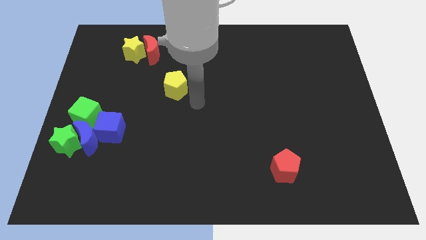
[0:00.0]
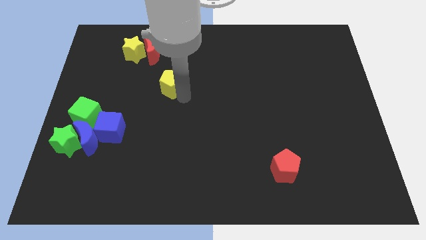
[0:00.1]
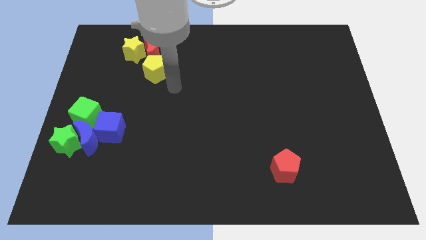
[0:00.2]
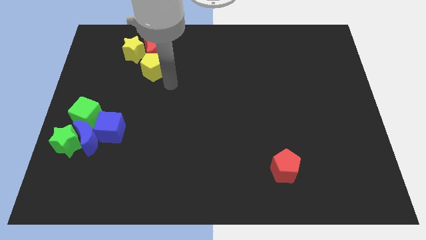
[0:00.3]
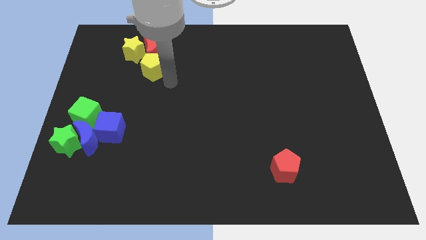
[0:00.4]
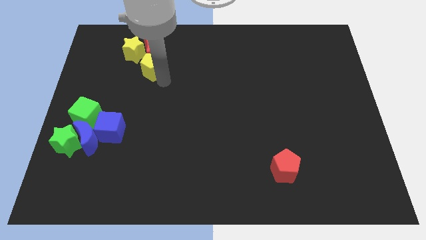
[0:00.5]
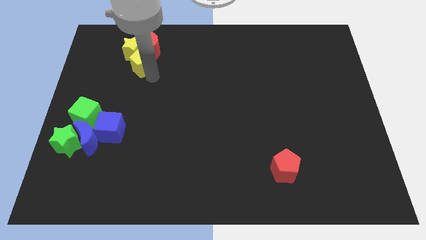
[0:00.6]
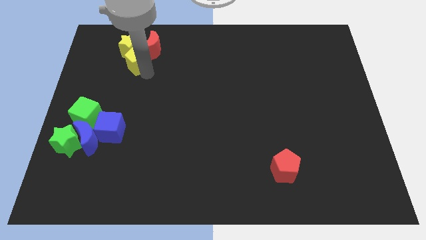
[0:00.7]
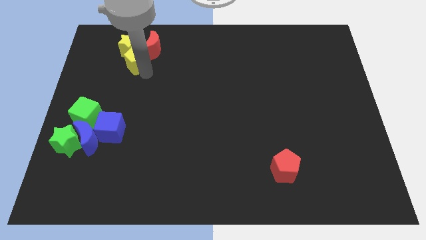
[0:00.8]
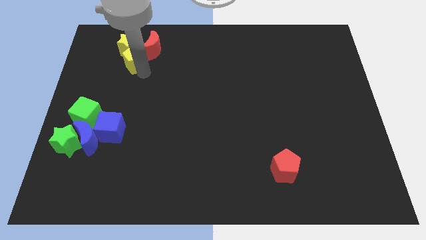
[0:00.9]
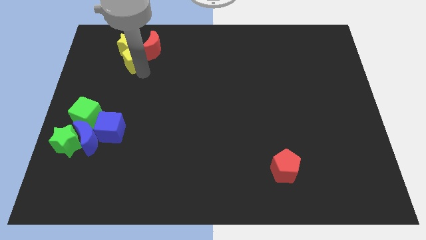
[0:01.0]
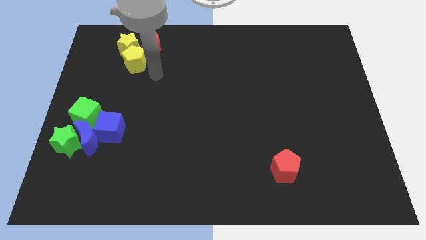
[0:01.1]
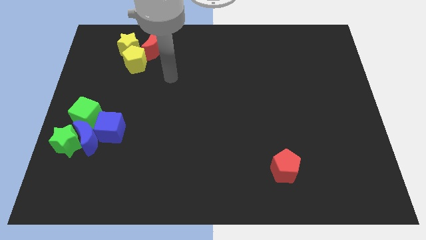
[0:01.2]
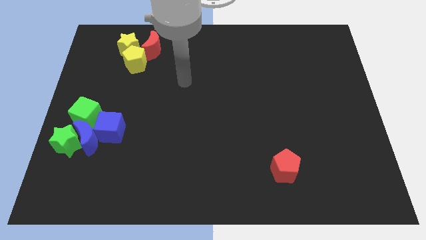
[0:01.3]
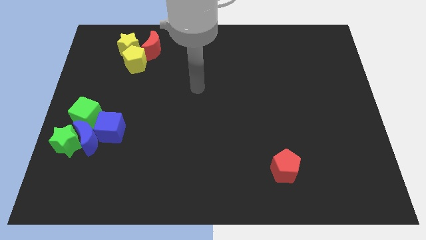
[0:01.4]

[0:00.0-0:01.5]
push the yellow pentagon into the yellow star

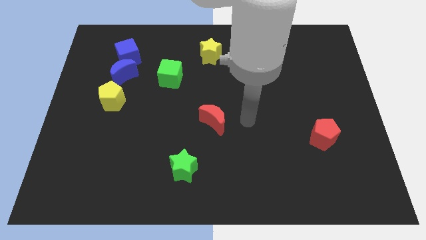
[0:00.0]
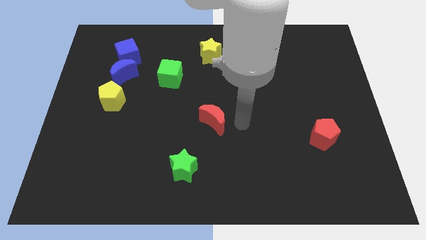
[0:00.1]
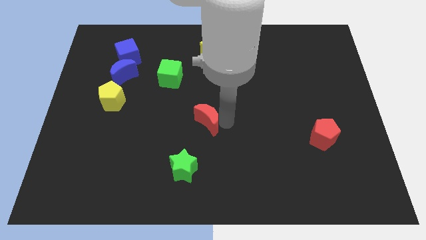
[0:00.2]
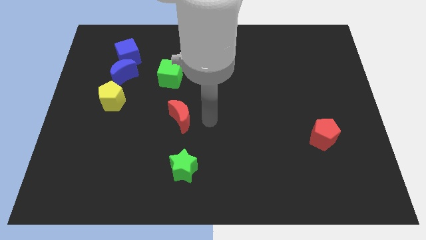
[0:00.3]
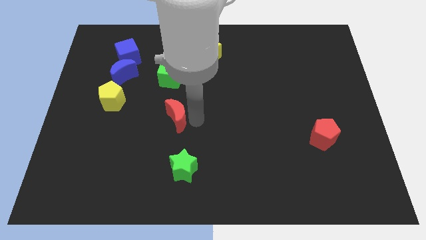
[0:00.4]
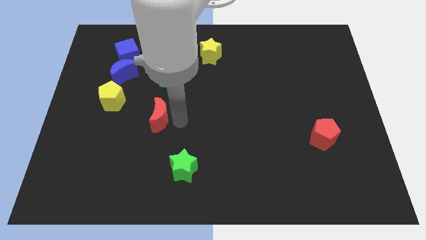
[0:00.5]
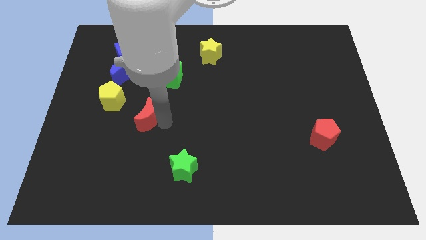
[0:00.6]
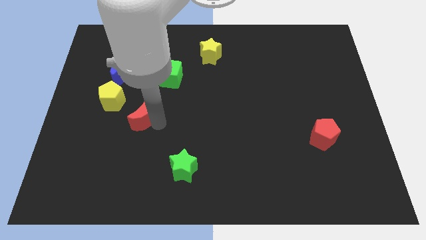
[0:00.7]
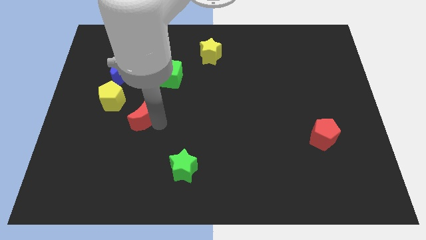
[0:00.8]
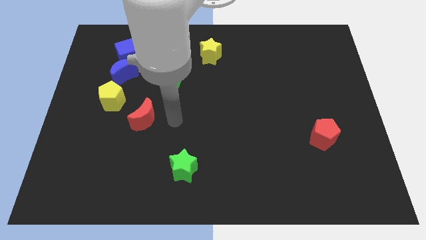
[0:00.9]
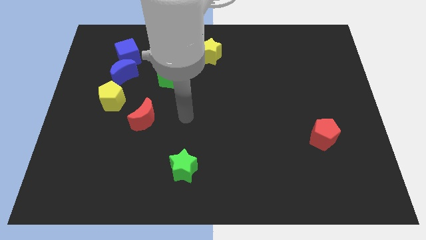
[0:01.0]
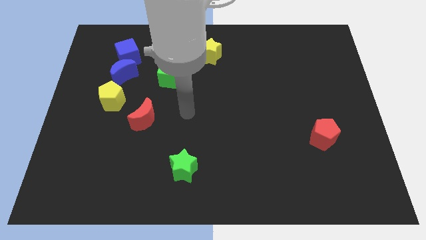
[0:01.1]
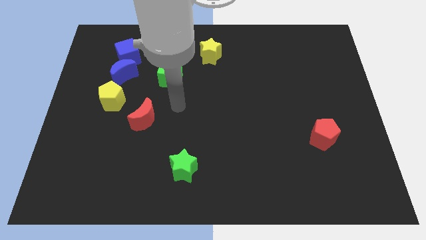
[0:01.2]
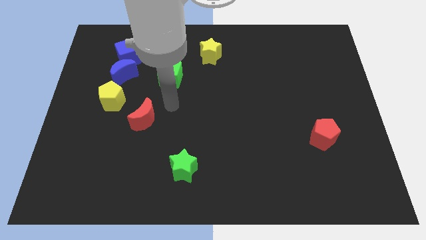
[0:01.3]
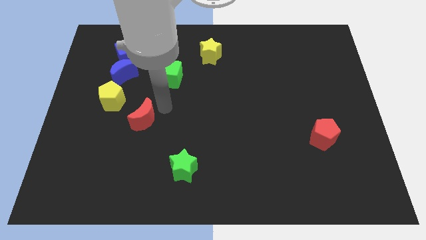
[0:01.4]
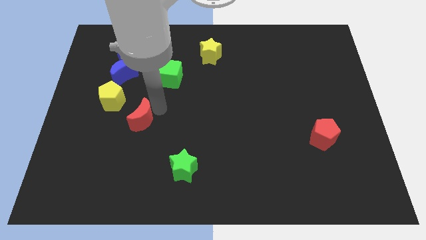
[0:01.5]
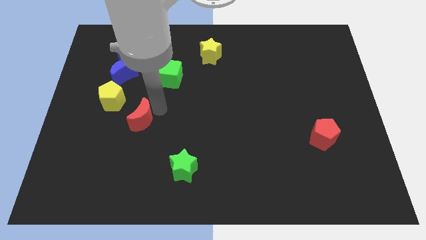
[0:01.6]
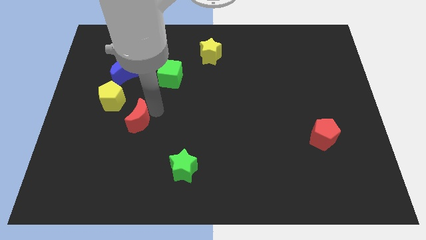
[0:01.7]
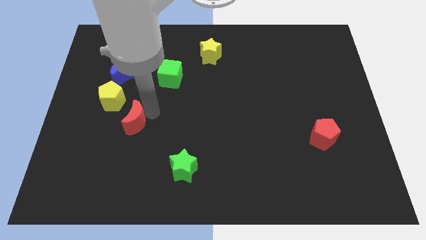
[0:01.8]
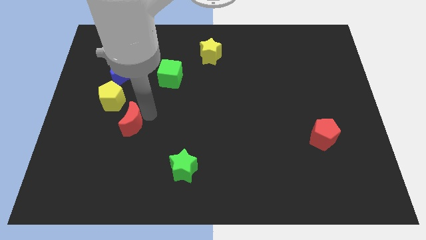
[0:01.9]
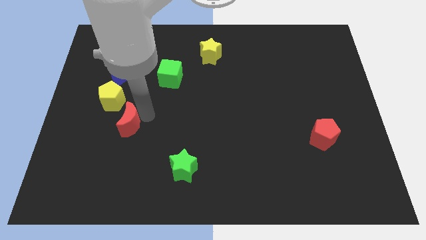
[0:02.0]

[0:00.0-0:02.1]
slide the red moon towards the left side of the board

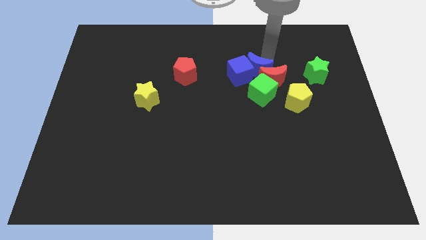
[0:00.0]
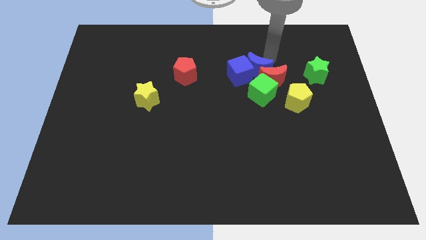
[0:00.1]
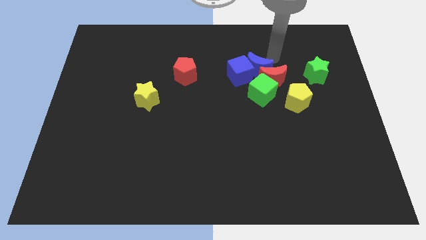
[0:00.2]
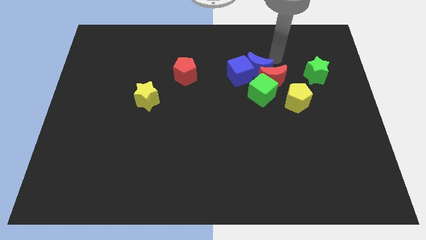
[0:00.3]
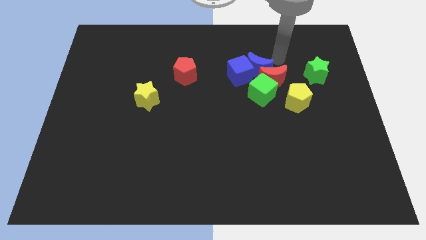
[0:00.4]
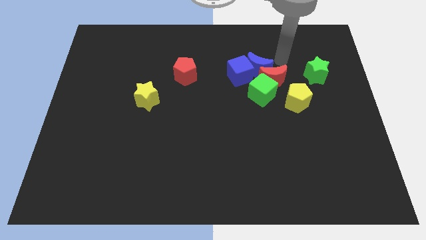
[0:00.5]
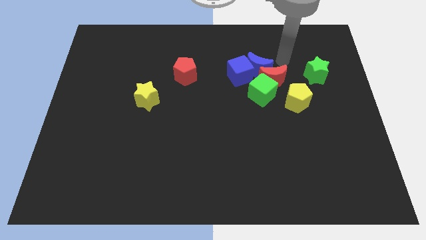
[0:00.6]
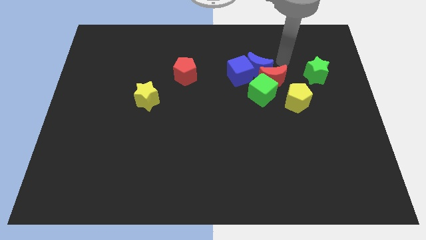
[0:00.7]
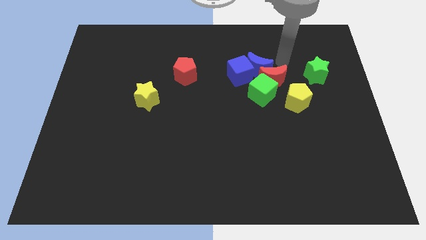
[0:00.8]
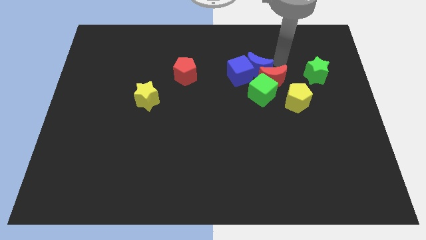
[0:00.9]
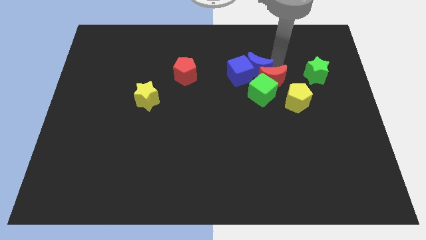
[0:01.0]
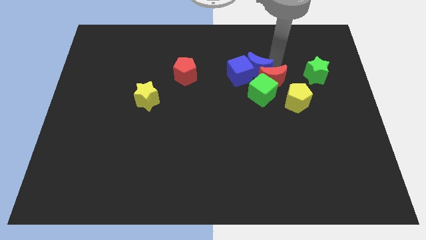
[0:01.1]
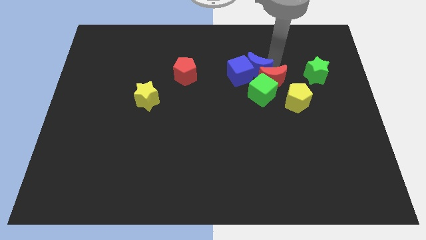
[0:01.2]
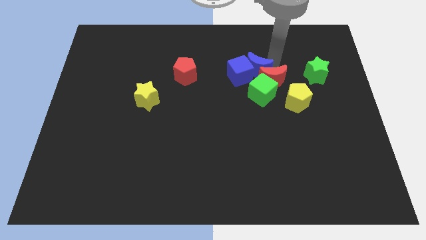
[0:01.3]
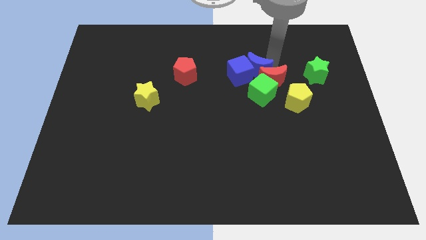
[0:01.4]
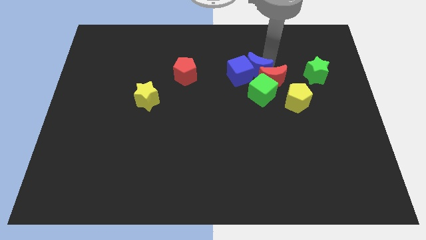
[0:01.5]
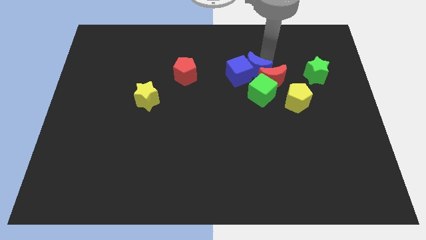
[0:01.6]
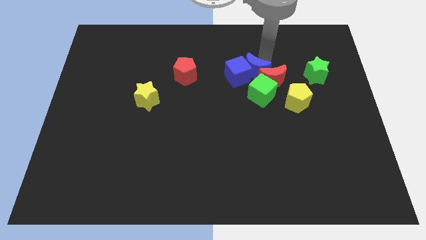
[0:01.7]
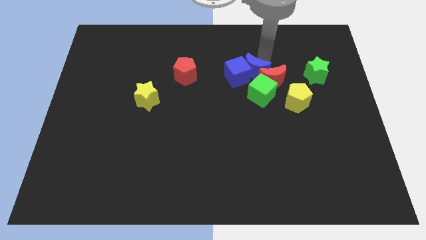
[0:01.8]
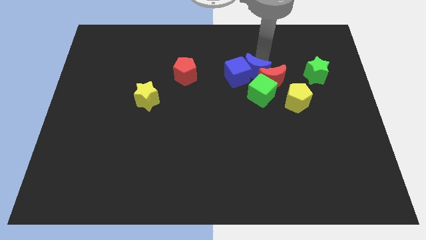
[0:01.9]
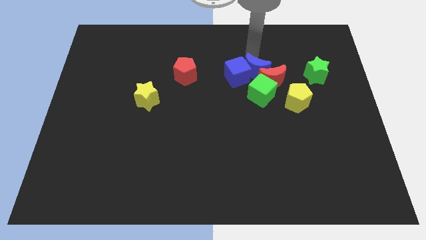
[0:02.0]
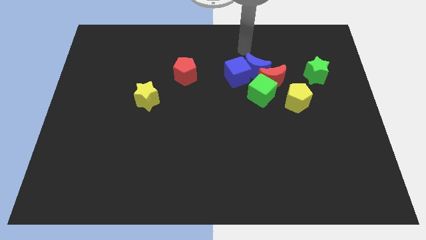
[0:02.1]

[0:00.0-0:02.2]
push the blue moon into the group of blocks

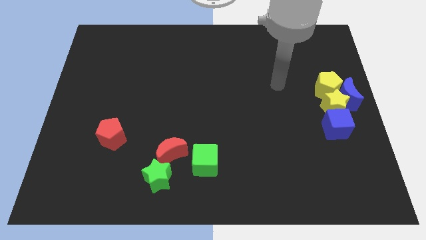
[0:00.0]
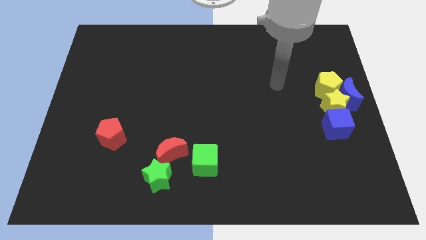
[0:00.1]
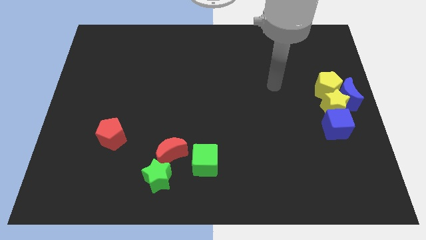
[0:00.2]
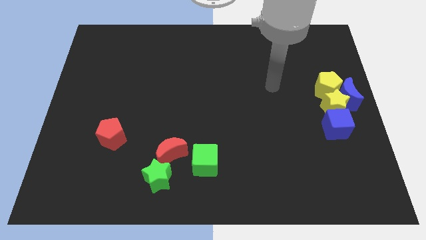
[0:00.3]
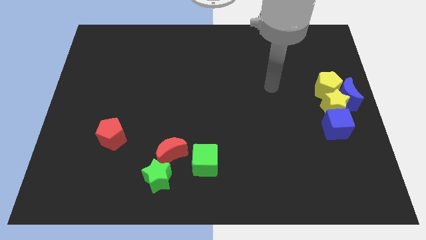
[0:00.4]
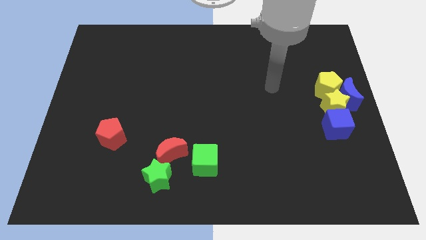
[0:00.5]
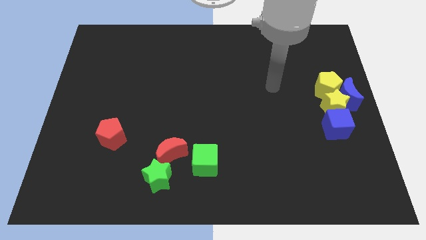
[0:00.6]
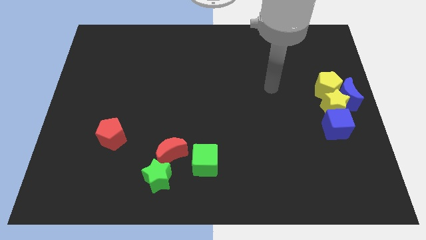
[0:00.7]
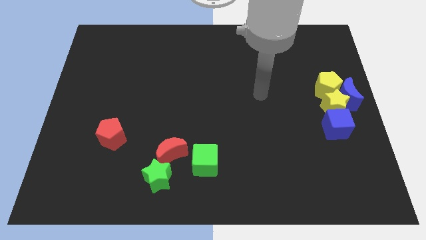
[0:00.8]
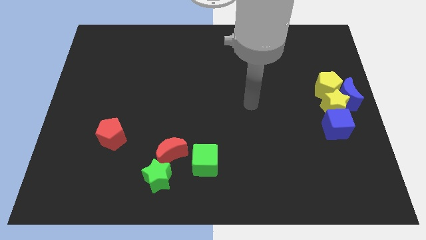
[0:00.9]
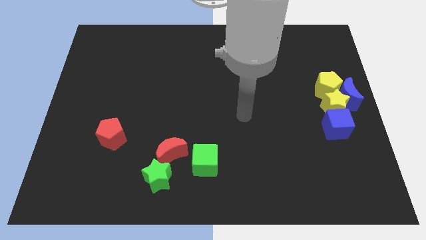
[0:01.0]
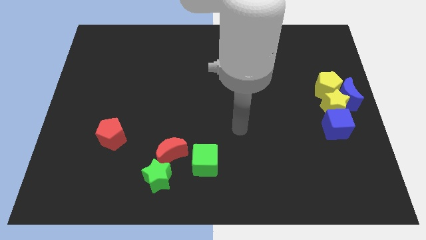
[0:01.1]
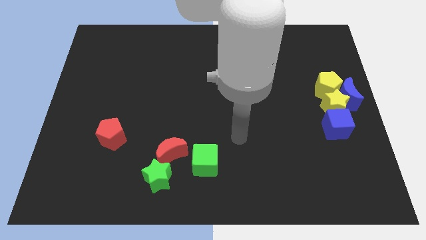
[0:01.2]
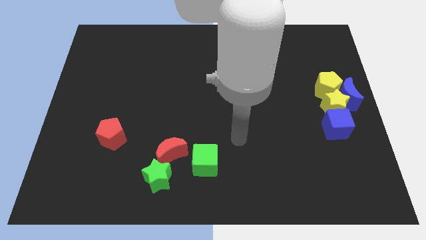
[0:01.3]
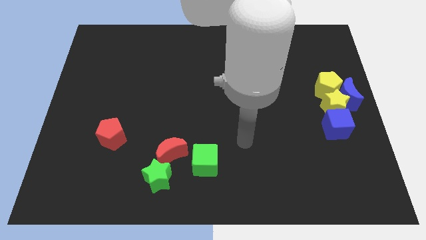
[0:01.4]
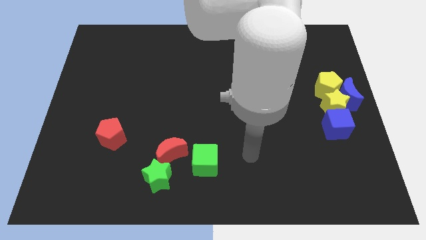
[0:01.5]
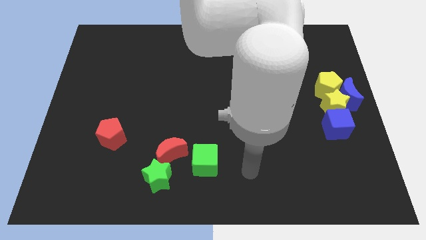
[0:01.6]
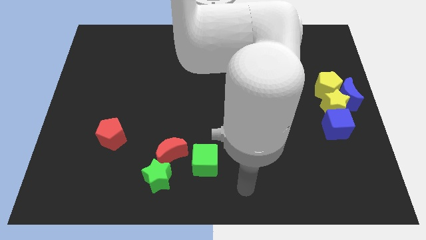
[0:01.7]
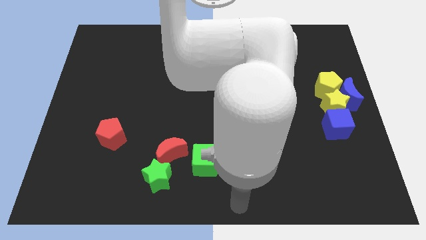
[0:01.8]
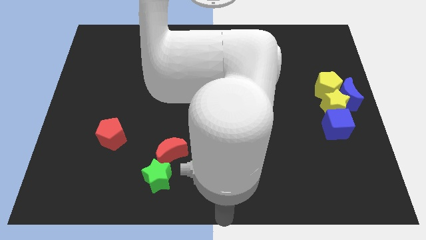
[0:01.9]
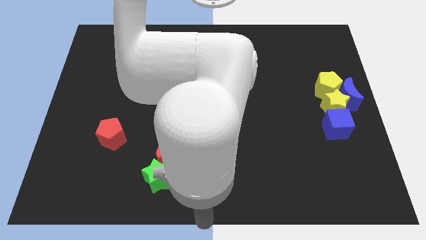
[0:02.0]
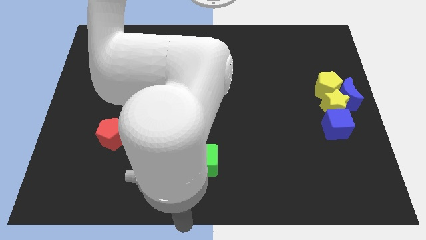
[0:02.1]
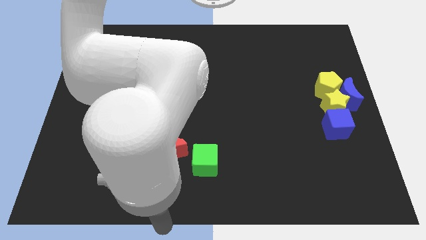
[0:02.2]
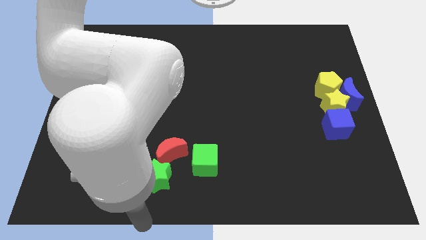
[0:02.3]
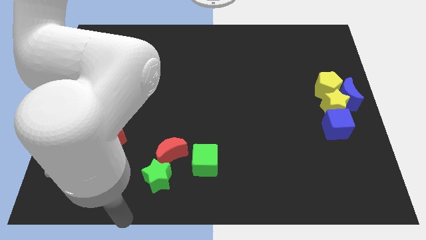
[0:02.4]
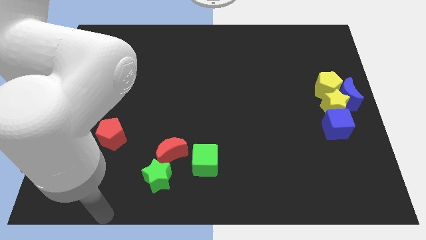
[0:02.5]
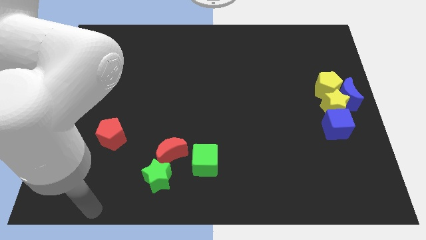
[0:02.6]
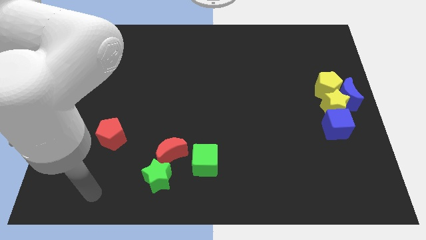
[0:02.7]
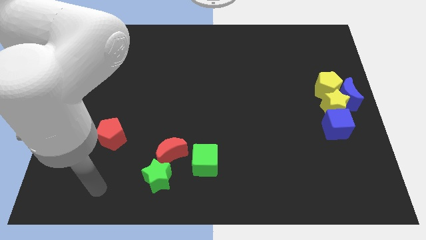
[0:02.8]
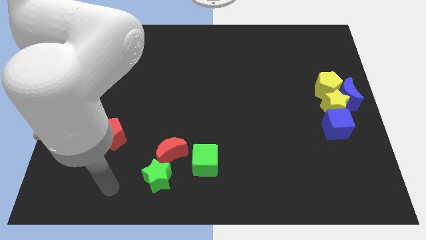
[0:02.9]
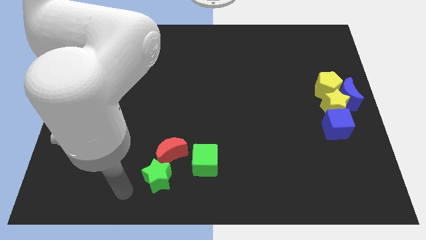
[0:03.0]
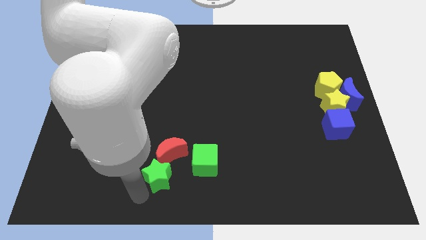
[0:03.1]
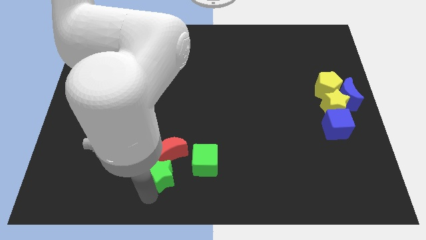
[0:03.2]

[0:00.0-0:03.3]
move your arm to the bottom of the green star

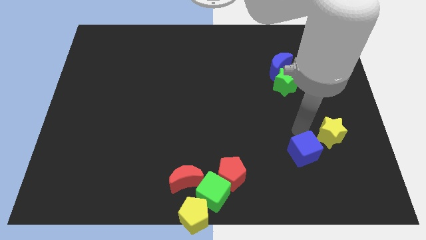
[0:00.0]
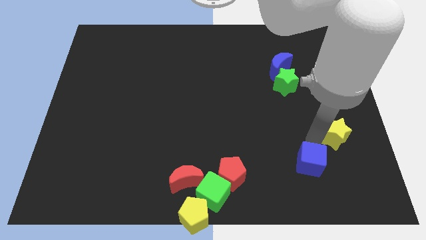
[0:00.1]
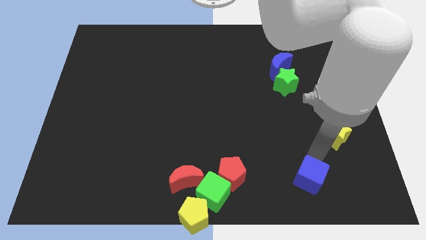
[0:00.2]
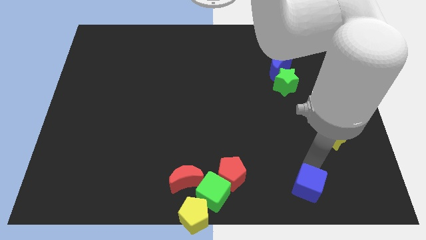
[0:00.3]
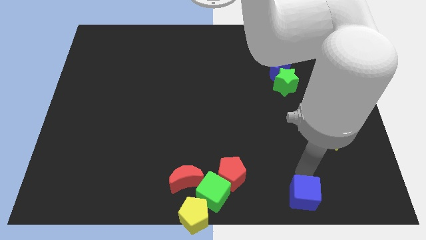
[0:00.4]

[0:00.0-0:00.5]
separate blue cube and yellow star
